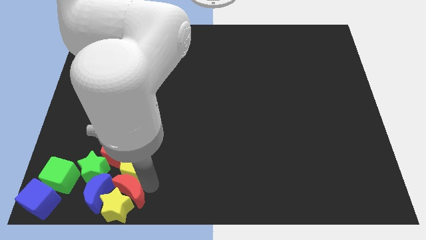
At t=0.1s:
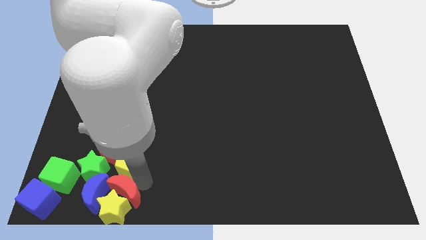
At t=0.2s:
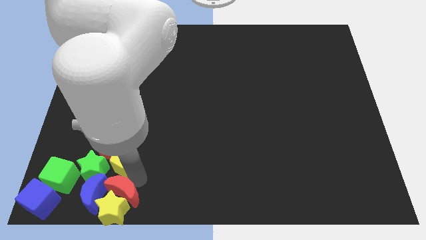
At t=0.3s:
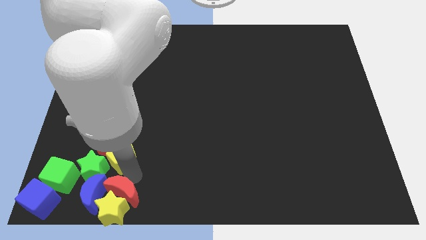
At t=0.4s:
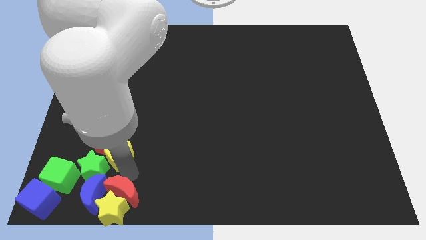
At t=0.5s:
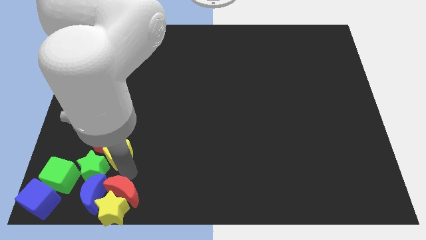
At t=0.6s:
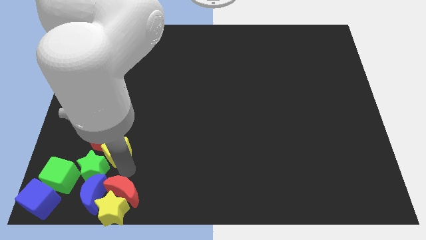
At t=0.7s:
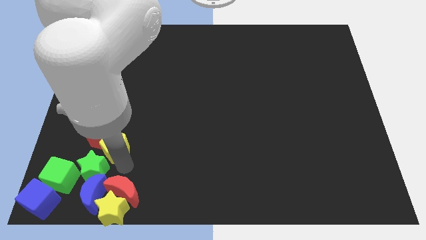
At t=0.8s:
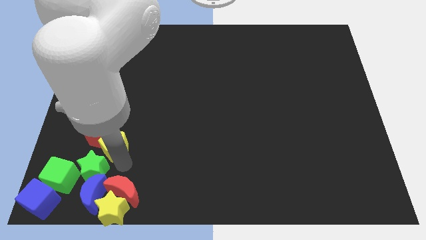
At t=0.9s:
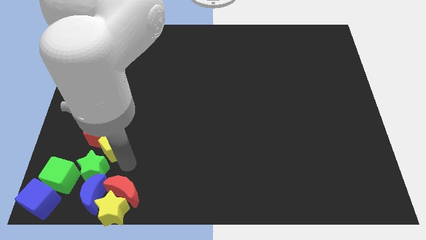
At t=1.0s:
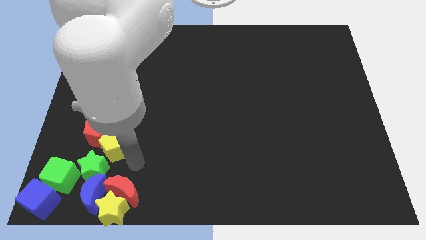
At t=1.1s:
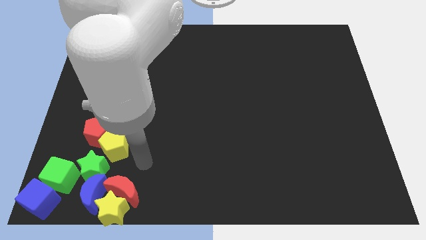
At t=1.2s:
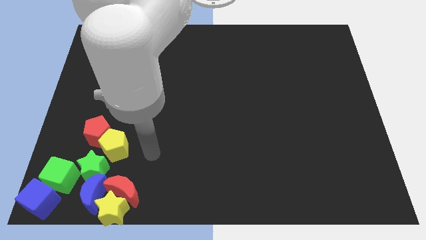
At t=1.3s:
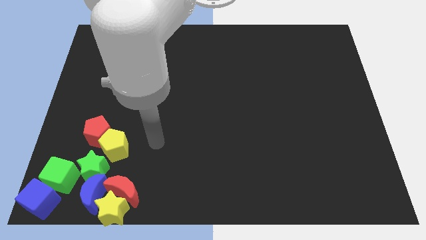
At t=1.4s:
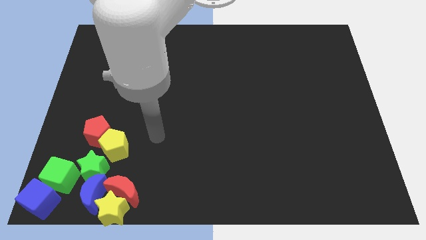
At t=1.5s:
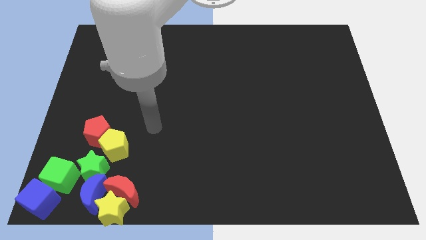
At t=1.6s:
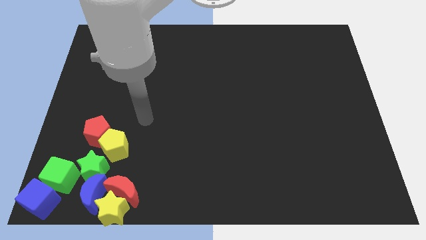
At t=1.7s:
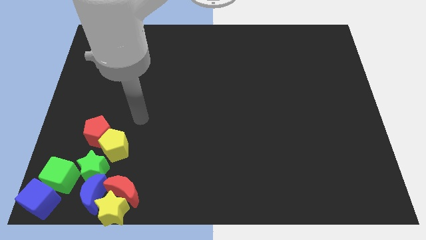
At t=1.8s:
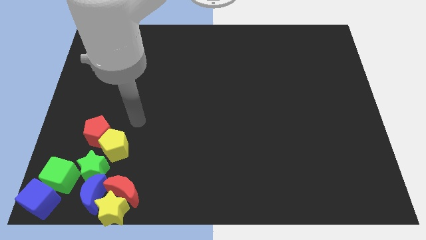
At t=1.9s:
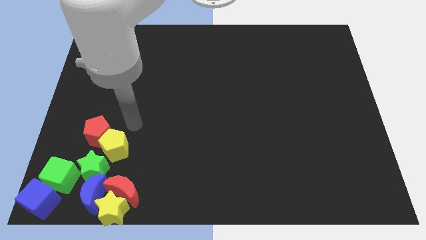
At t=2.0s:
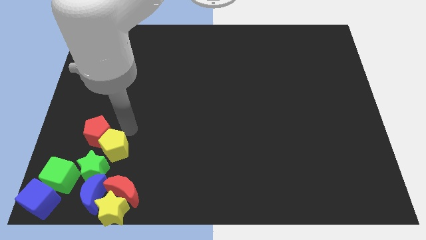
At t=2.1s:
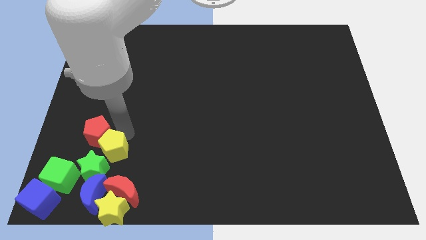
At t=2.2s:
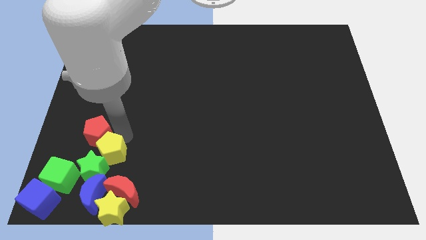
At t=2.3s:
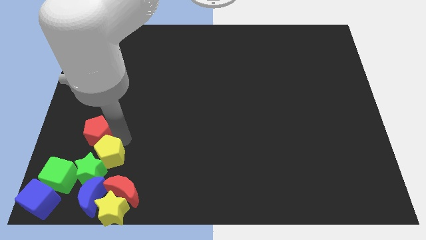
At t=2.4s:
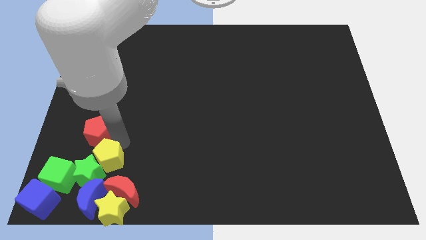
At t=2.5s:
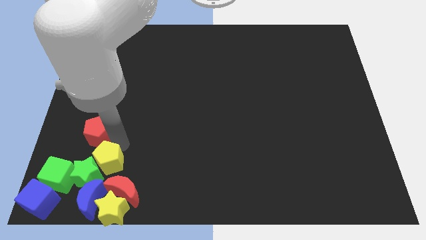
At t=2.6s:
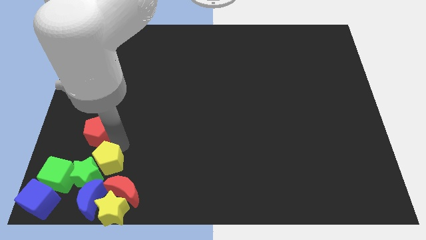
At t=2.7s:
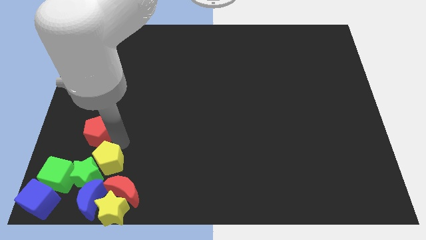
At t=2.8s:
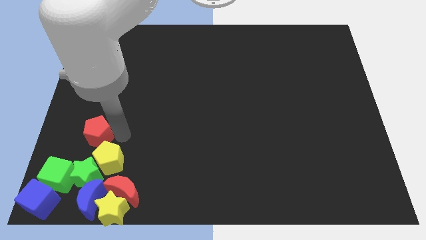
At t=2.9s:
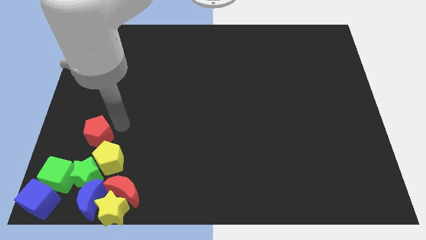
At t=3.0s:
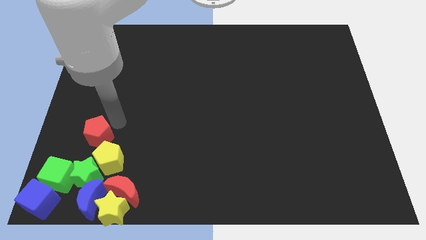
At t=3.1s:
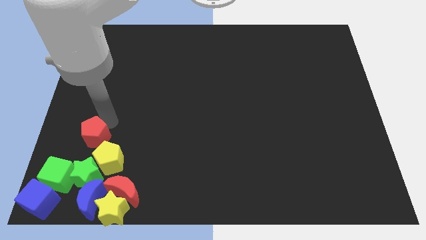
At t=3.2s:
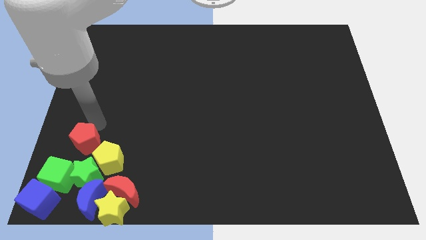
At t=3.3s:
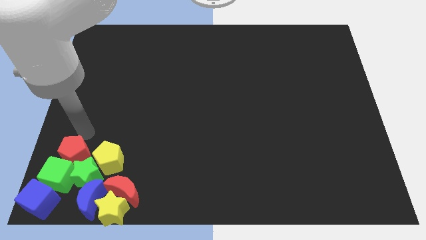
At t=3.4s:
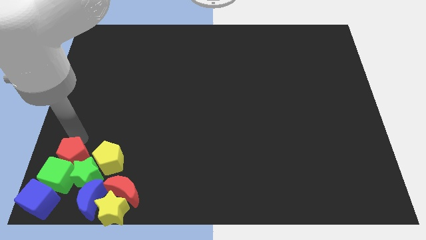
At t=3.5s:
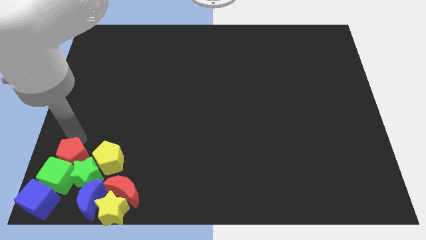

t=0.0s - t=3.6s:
push the pentagons towards the green blocks

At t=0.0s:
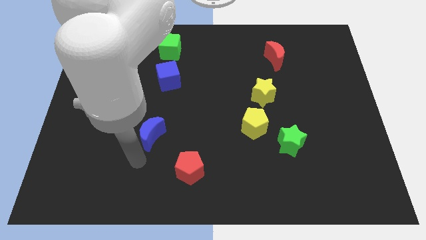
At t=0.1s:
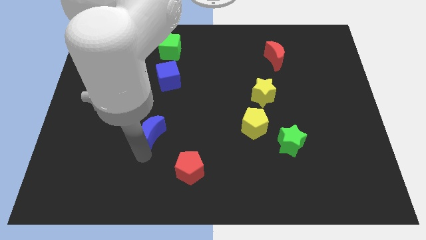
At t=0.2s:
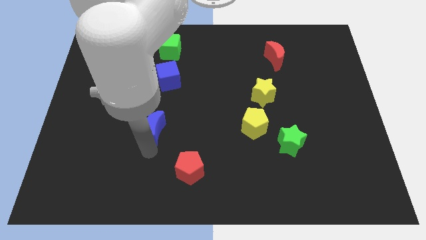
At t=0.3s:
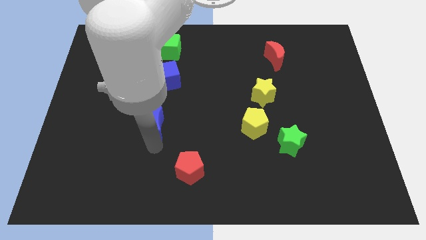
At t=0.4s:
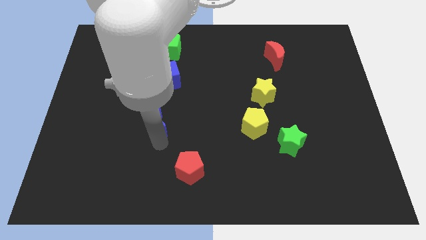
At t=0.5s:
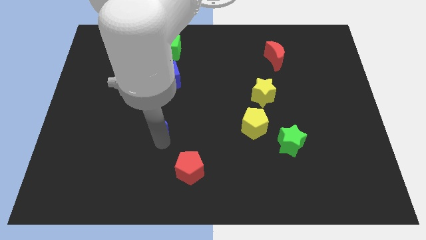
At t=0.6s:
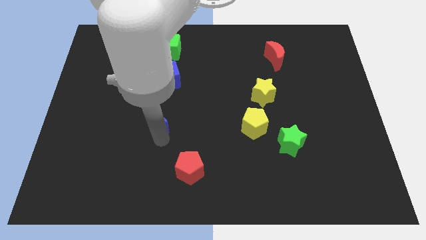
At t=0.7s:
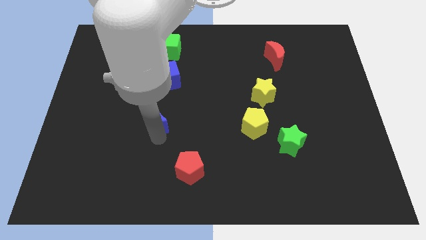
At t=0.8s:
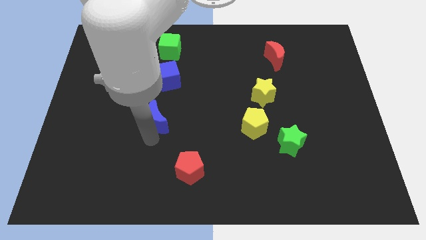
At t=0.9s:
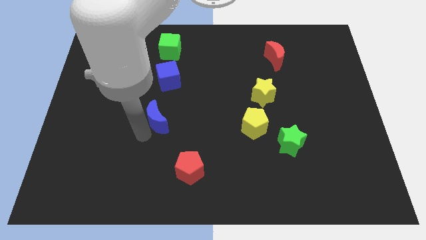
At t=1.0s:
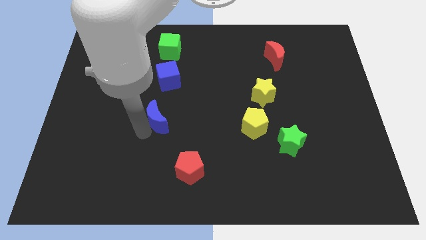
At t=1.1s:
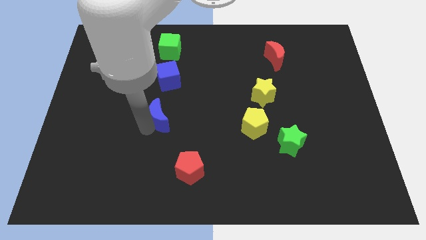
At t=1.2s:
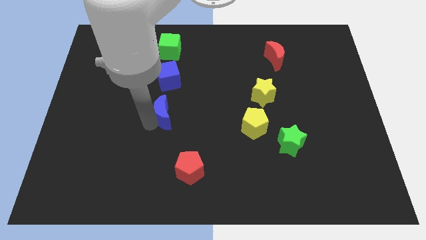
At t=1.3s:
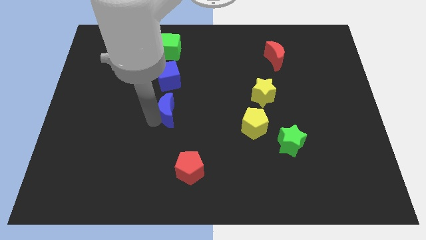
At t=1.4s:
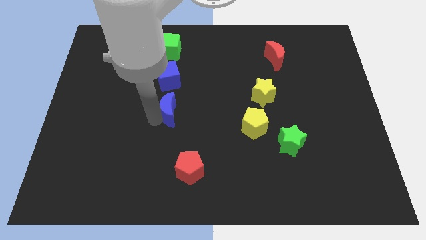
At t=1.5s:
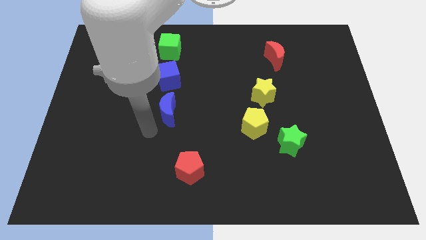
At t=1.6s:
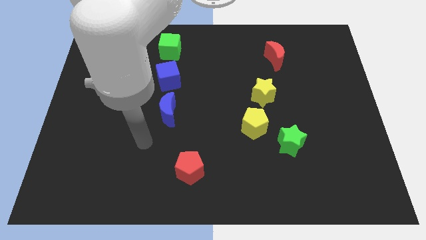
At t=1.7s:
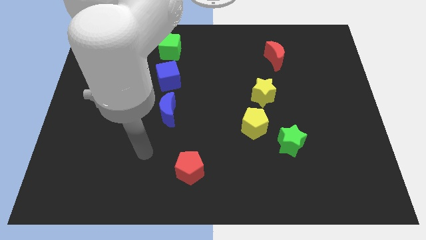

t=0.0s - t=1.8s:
move the blue crescent below the blue cube

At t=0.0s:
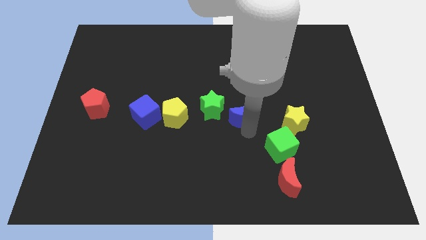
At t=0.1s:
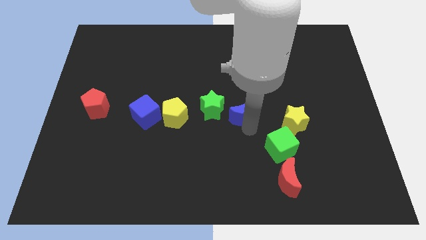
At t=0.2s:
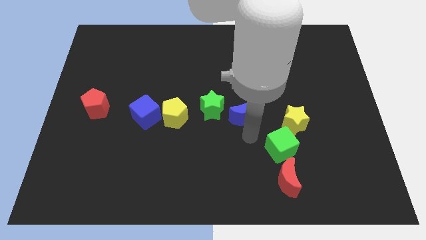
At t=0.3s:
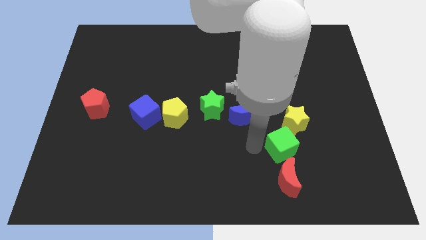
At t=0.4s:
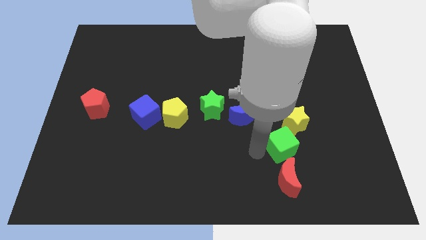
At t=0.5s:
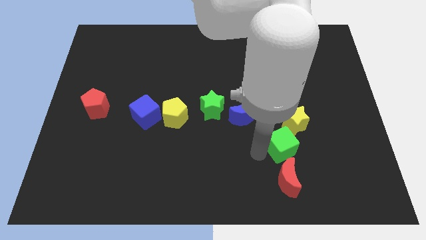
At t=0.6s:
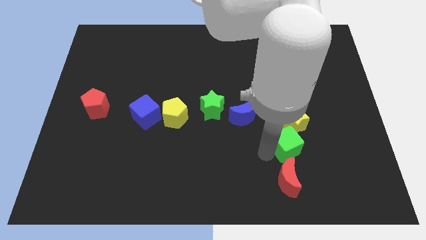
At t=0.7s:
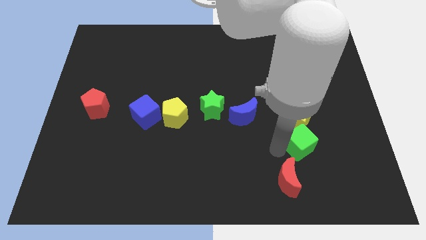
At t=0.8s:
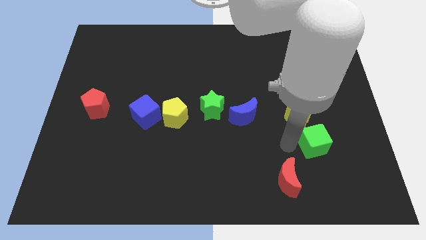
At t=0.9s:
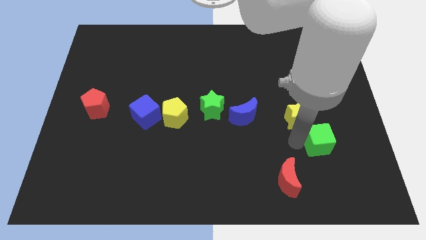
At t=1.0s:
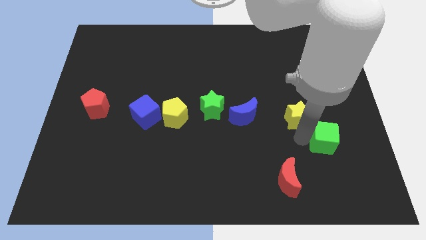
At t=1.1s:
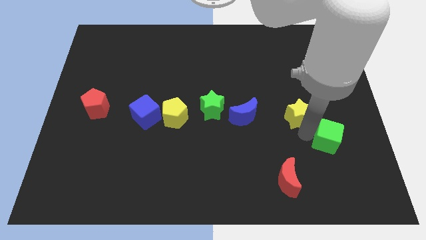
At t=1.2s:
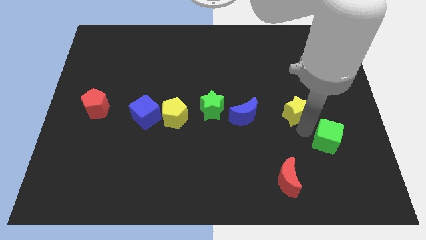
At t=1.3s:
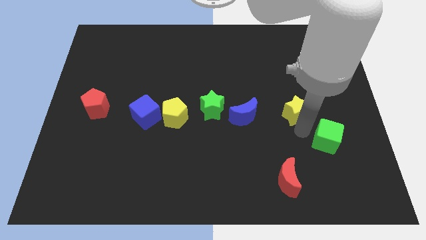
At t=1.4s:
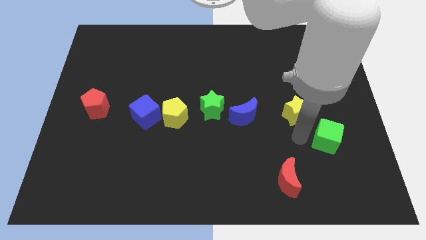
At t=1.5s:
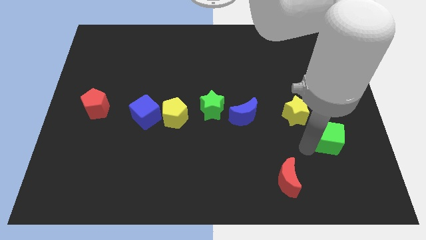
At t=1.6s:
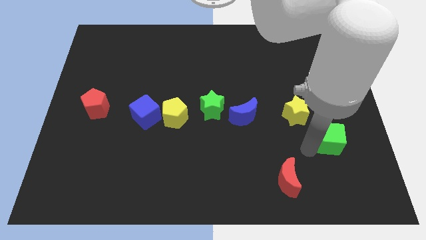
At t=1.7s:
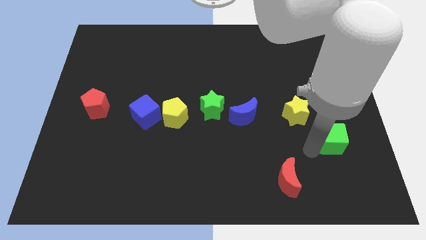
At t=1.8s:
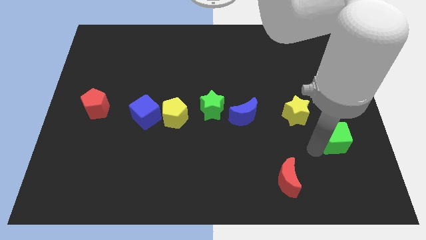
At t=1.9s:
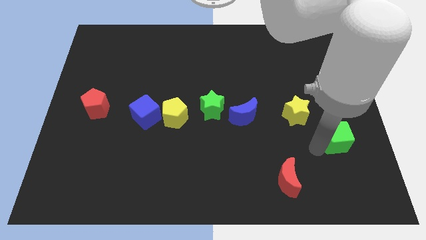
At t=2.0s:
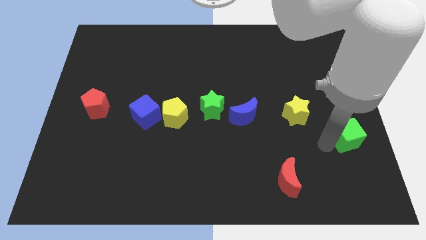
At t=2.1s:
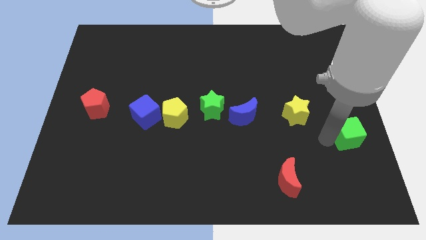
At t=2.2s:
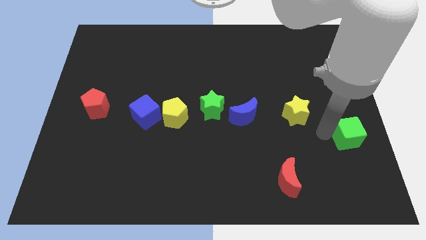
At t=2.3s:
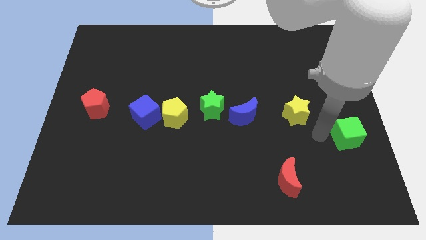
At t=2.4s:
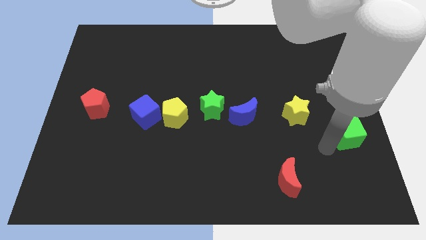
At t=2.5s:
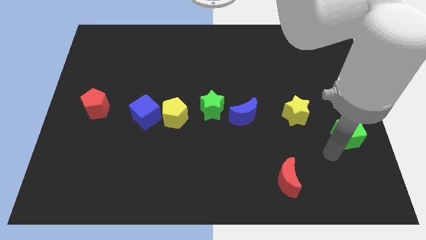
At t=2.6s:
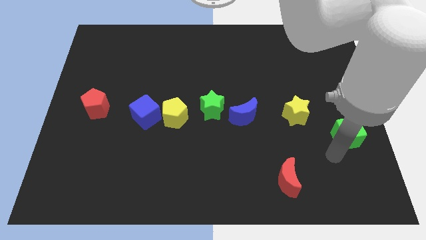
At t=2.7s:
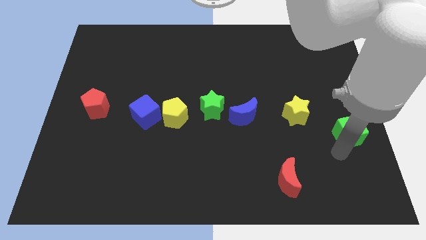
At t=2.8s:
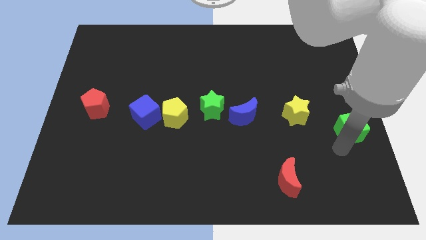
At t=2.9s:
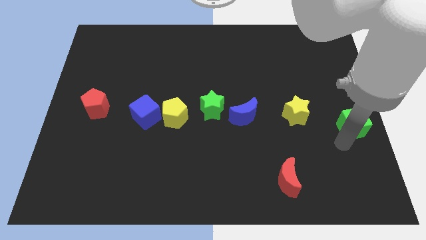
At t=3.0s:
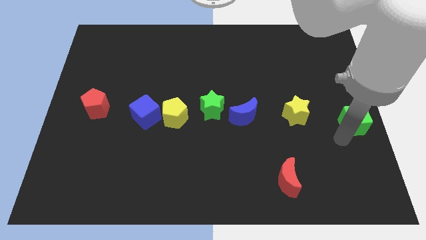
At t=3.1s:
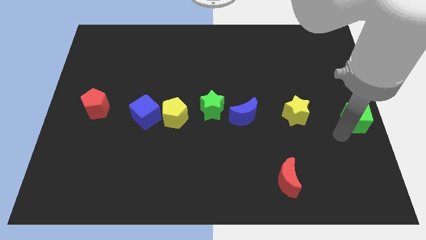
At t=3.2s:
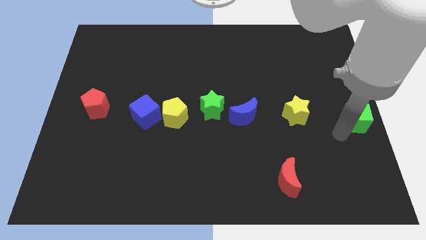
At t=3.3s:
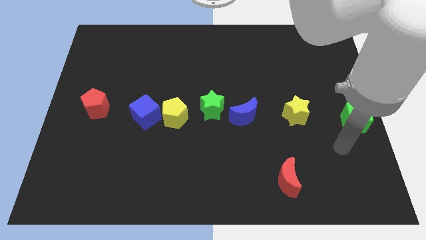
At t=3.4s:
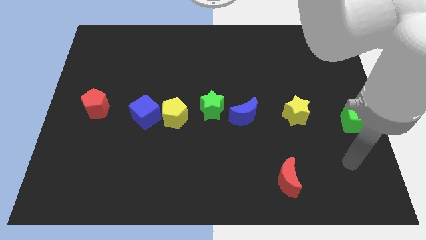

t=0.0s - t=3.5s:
place the green cube and blue moon horizontal to the yellow star
